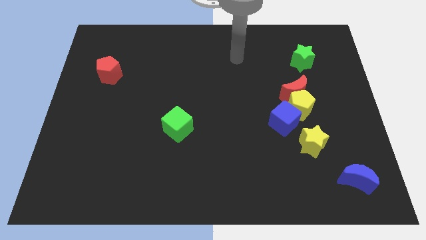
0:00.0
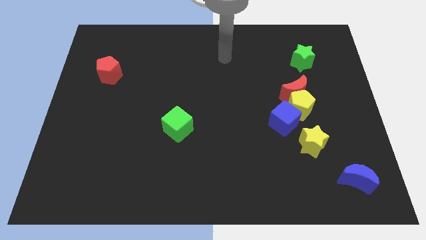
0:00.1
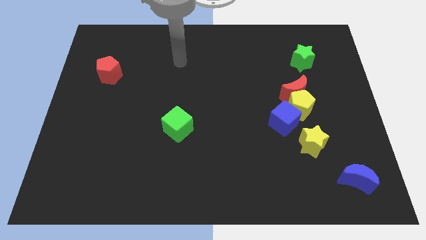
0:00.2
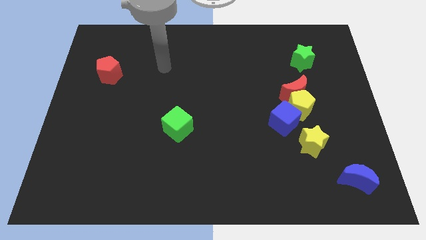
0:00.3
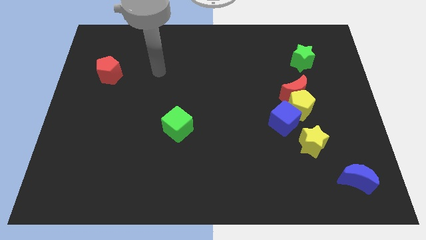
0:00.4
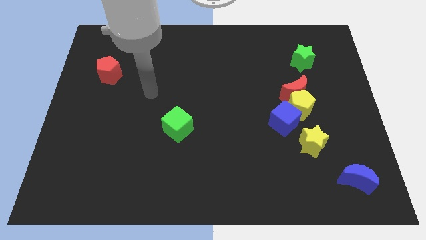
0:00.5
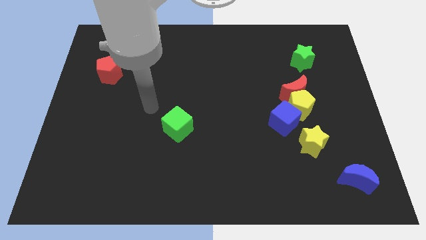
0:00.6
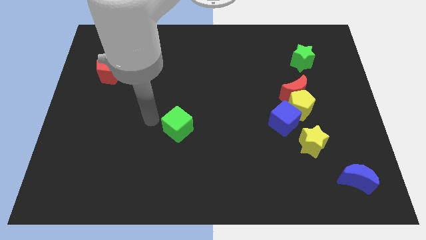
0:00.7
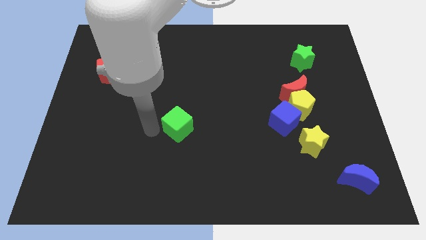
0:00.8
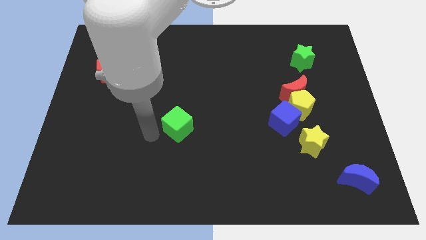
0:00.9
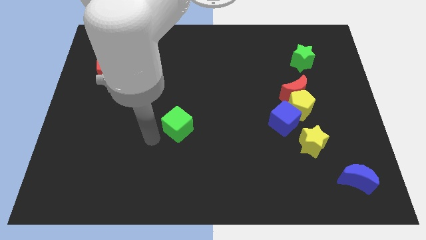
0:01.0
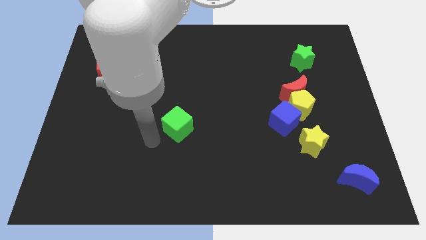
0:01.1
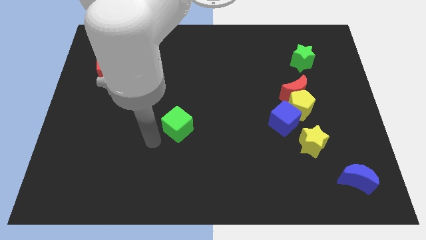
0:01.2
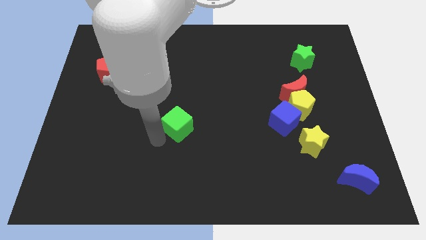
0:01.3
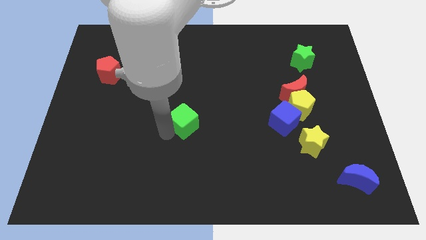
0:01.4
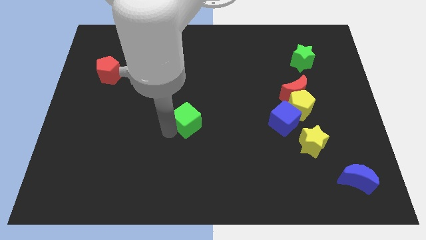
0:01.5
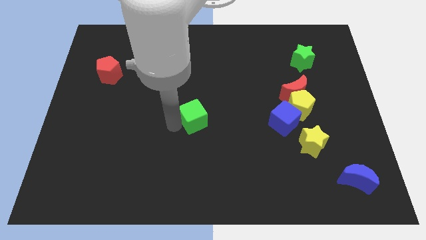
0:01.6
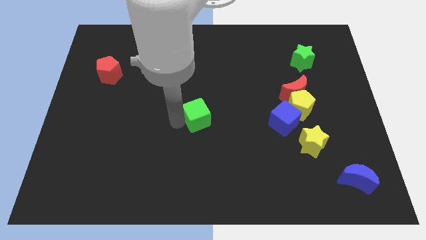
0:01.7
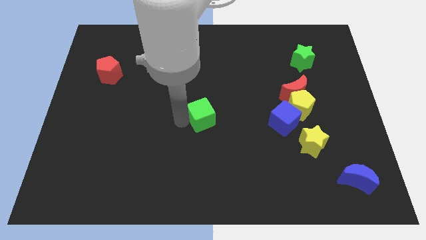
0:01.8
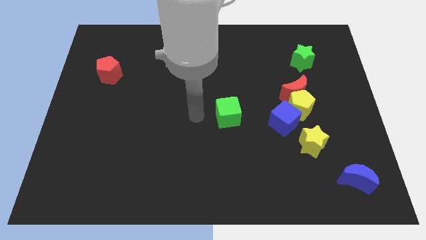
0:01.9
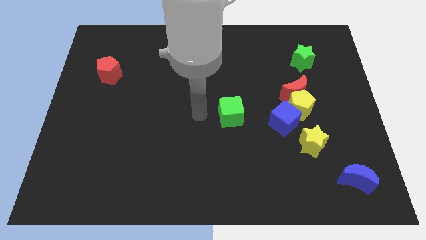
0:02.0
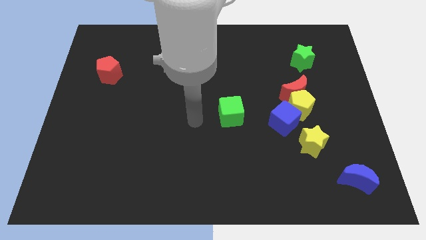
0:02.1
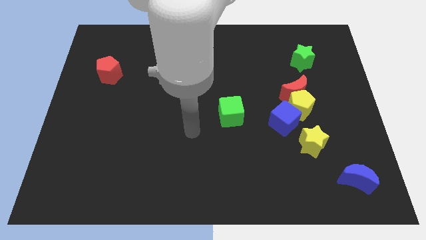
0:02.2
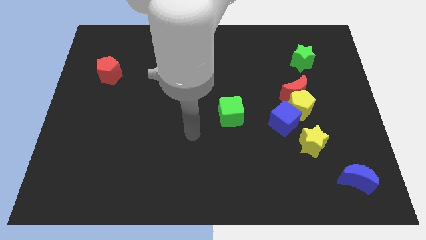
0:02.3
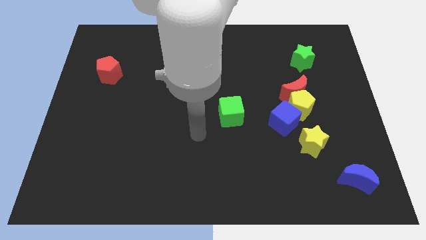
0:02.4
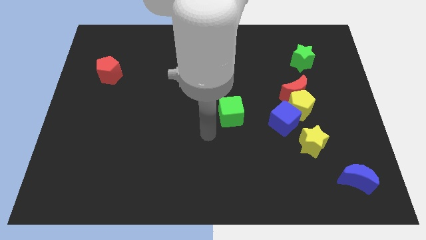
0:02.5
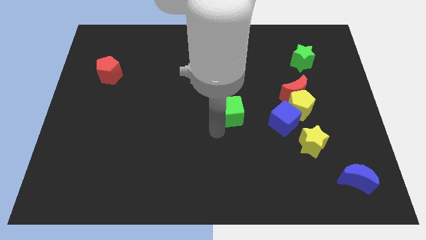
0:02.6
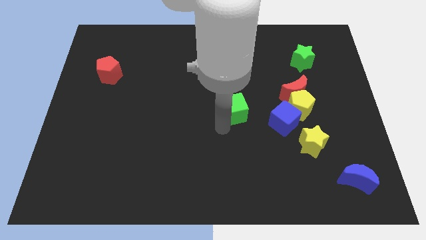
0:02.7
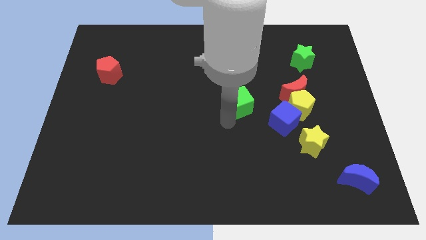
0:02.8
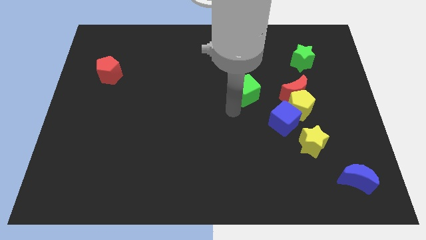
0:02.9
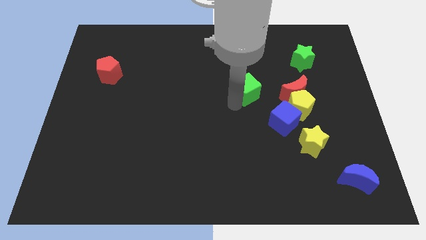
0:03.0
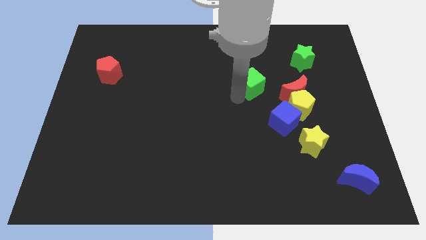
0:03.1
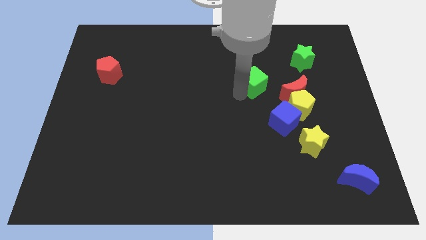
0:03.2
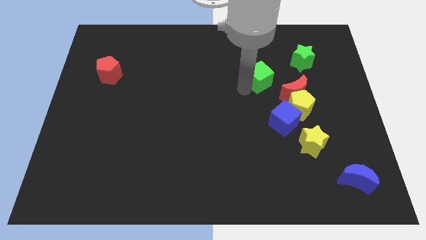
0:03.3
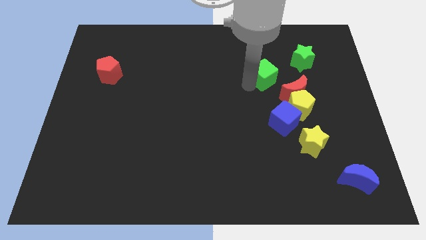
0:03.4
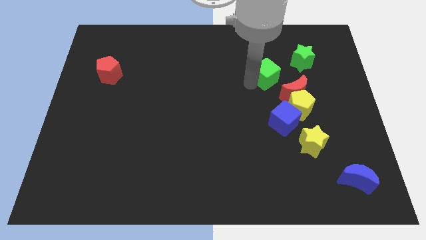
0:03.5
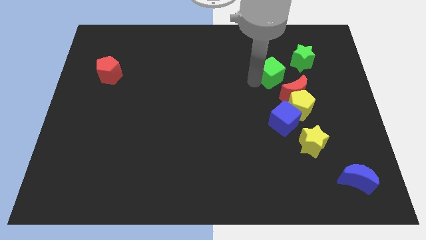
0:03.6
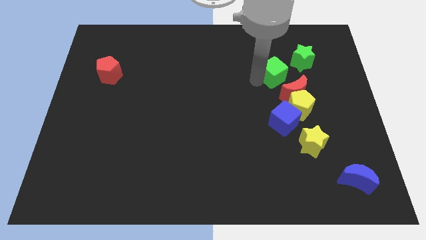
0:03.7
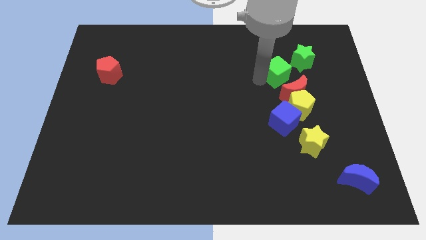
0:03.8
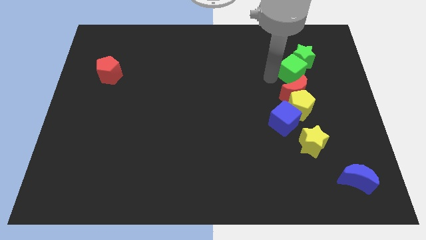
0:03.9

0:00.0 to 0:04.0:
put the green cube to the green star

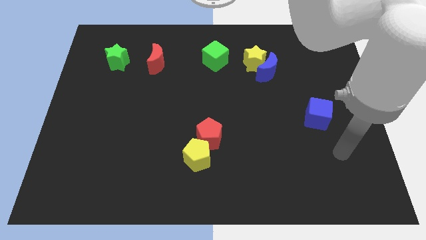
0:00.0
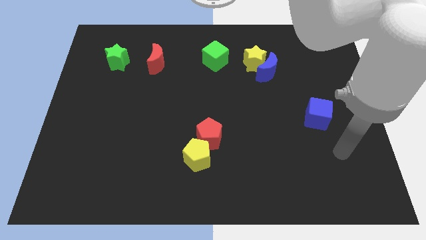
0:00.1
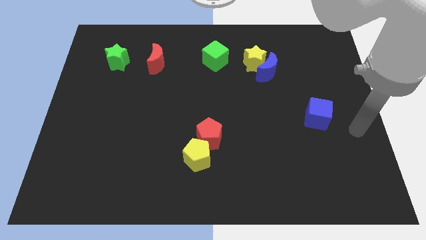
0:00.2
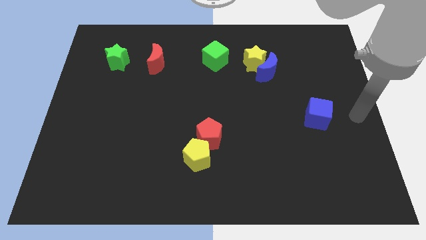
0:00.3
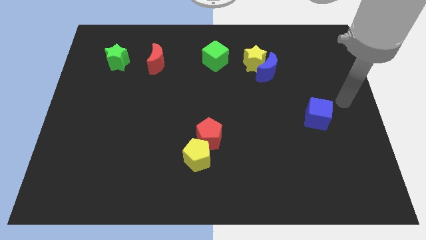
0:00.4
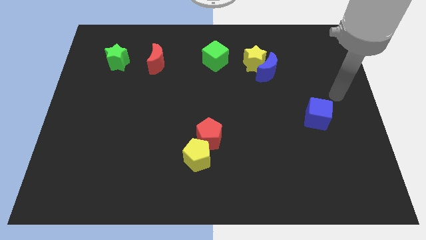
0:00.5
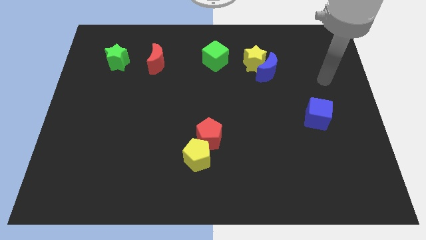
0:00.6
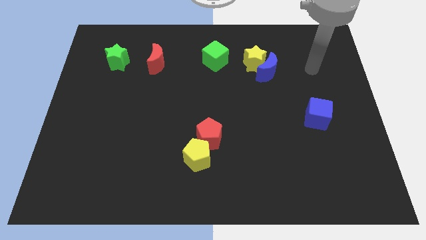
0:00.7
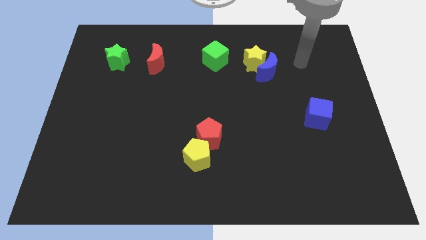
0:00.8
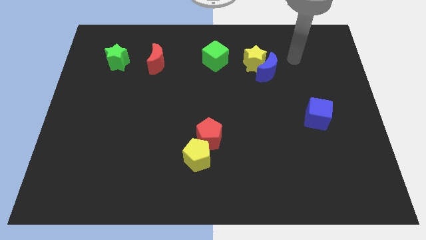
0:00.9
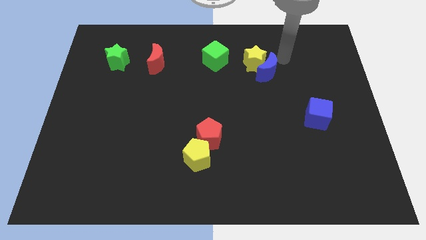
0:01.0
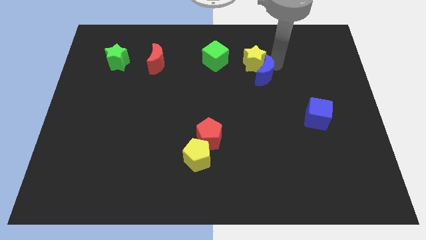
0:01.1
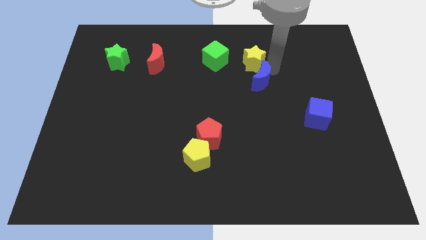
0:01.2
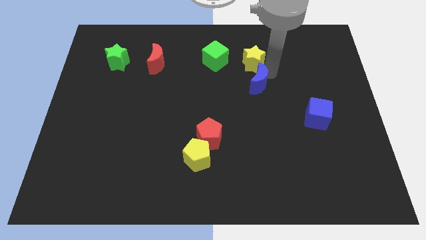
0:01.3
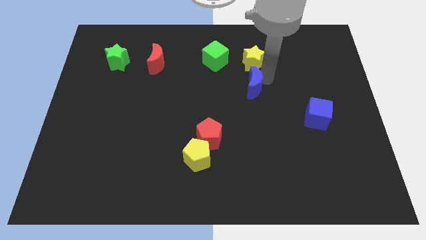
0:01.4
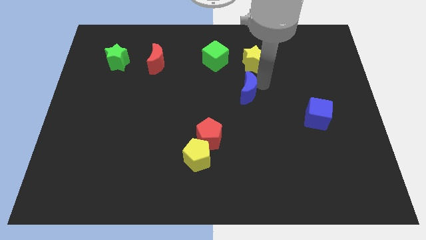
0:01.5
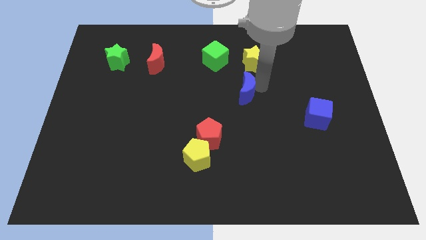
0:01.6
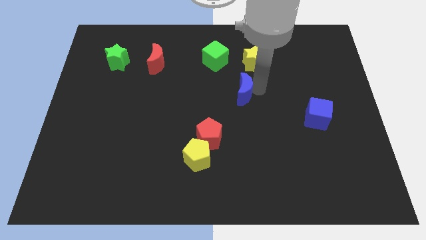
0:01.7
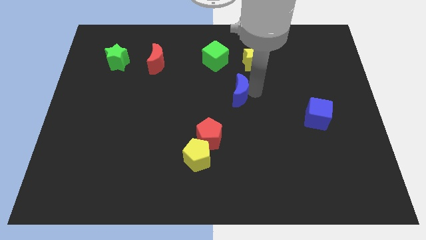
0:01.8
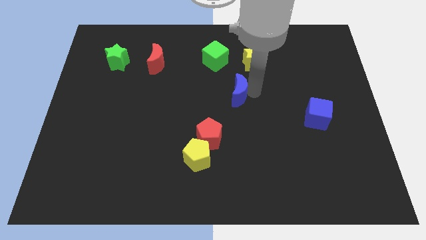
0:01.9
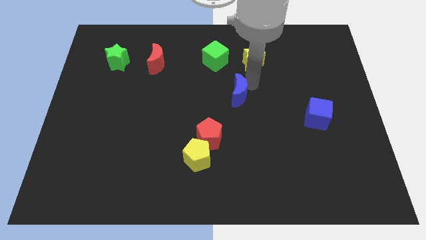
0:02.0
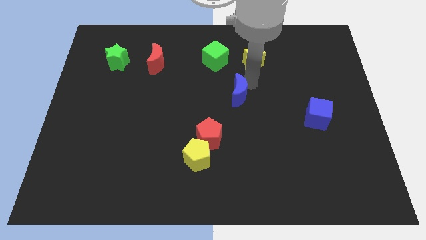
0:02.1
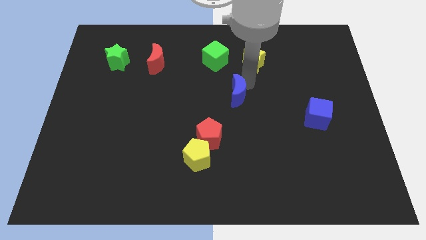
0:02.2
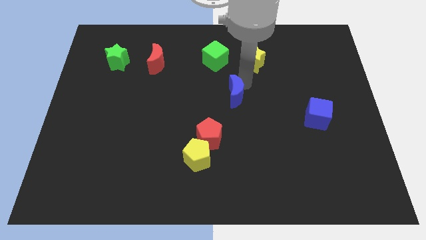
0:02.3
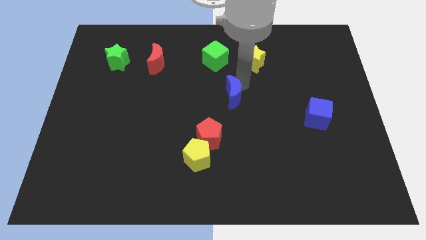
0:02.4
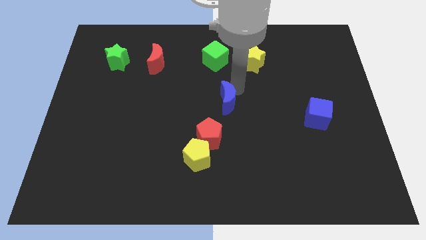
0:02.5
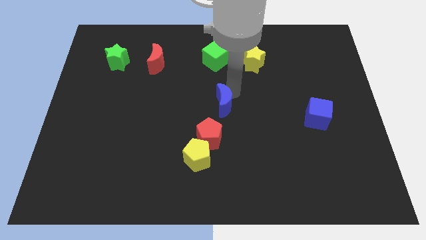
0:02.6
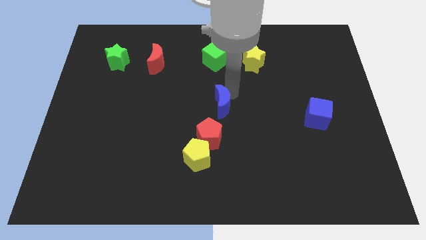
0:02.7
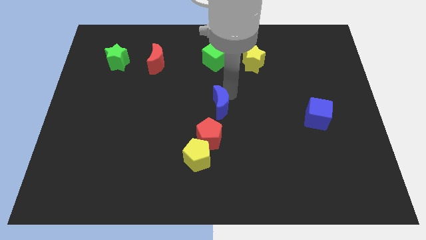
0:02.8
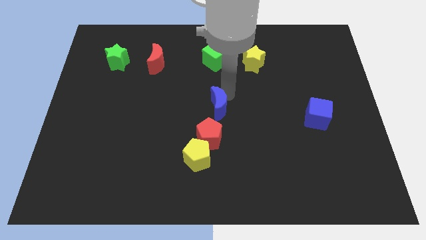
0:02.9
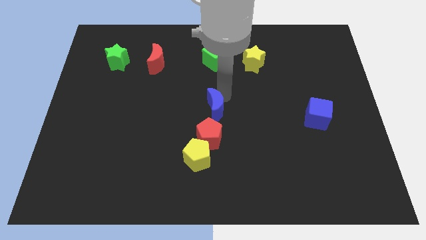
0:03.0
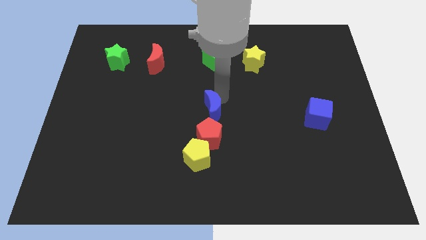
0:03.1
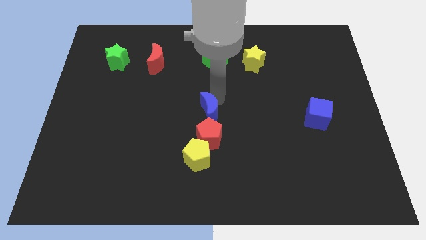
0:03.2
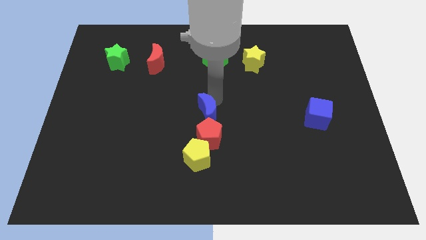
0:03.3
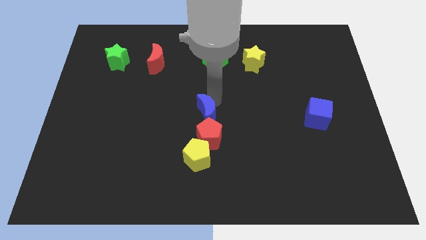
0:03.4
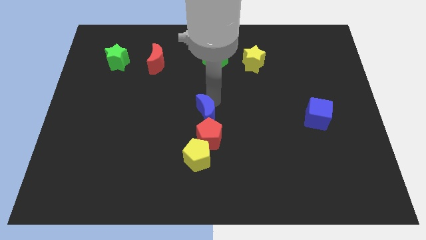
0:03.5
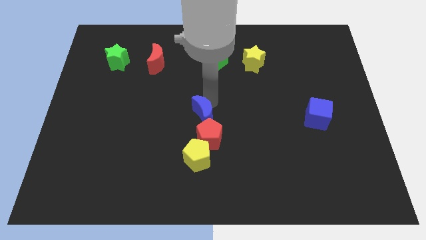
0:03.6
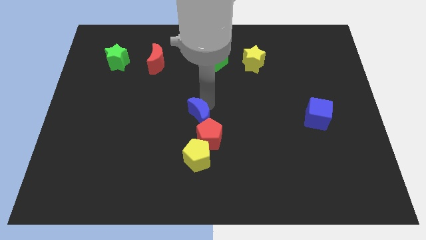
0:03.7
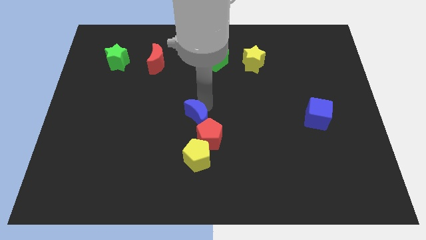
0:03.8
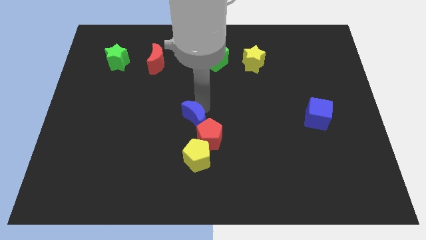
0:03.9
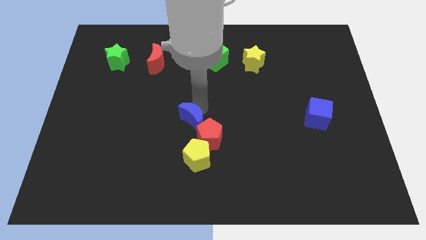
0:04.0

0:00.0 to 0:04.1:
move the blue moon next to the red pentagon

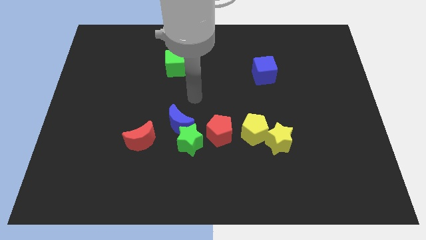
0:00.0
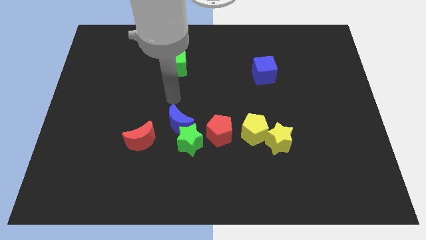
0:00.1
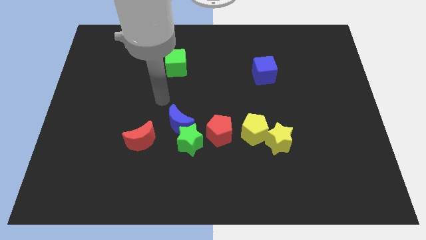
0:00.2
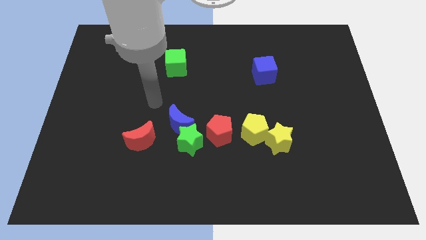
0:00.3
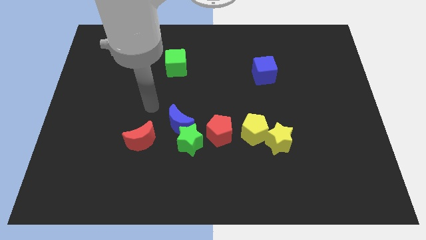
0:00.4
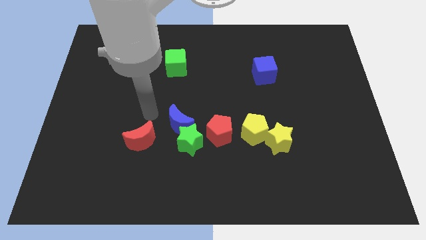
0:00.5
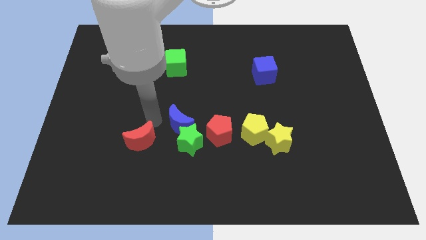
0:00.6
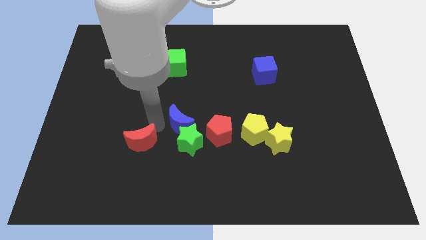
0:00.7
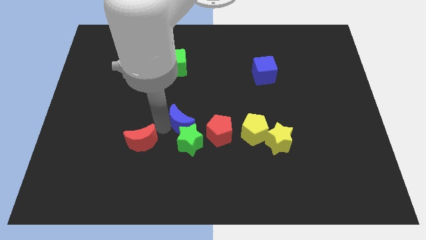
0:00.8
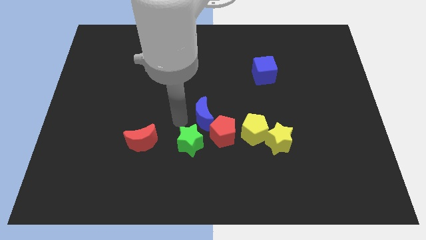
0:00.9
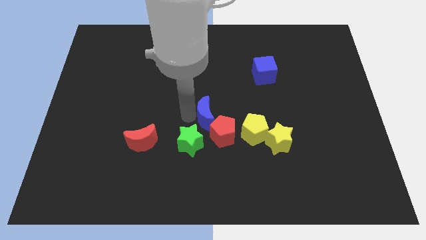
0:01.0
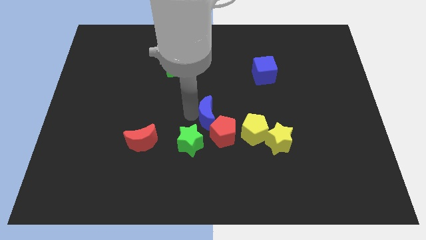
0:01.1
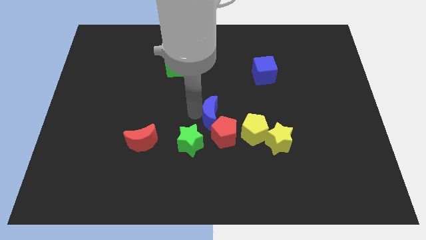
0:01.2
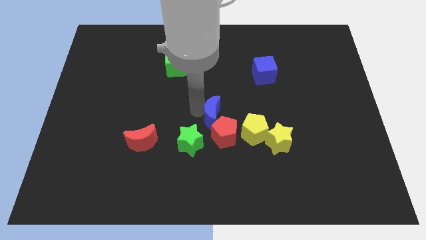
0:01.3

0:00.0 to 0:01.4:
put the blue moon to the red pentagon
